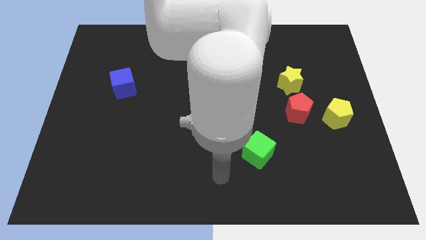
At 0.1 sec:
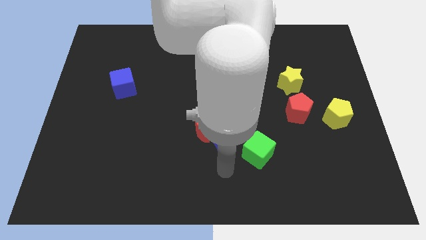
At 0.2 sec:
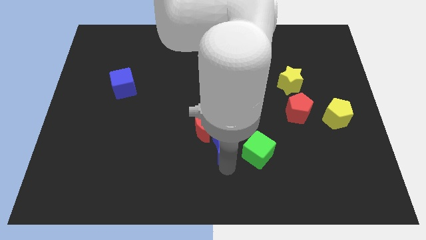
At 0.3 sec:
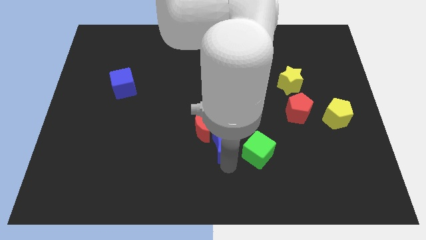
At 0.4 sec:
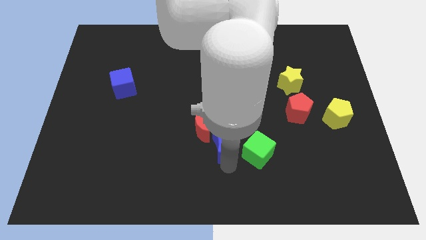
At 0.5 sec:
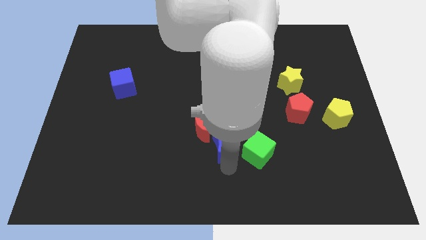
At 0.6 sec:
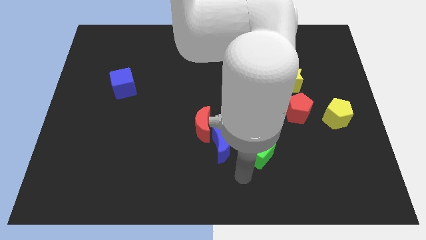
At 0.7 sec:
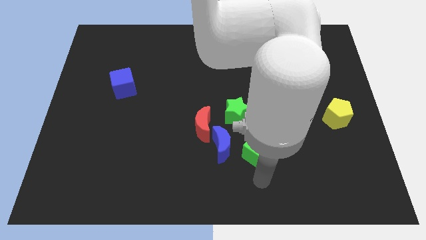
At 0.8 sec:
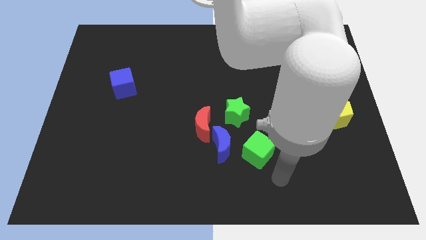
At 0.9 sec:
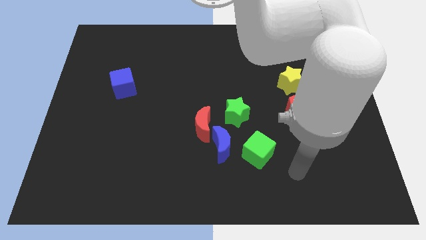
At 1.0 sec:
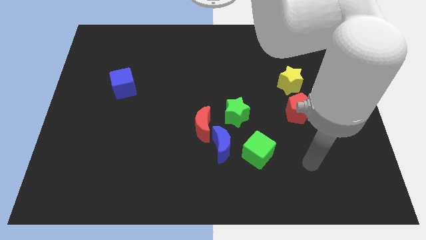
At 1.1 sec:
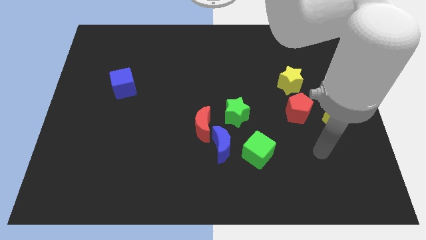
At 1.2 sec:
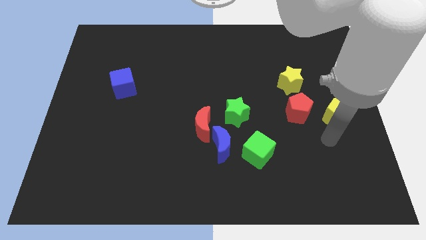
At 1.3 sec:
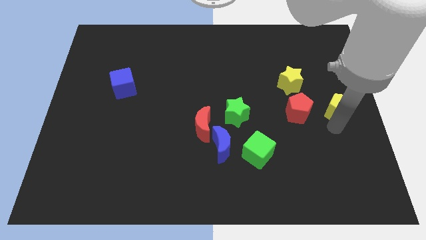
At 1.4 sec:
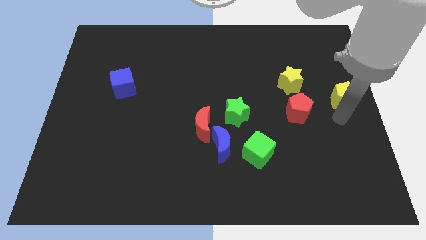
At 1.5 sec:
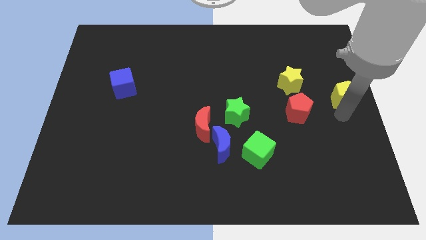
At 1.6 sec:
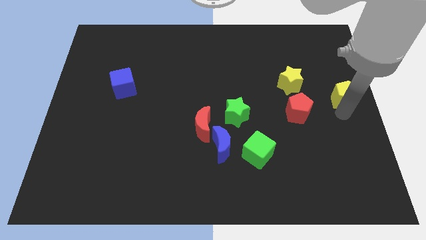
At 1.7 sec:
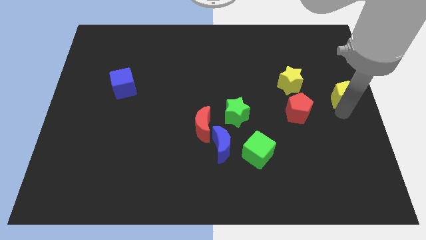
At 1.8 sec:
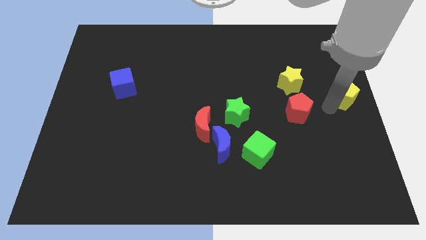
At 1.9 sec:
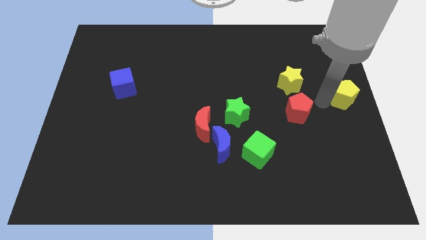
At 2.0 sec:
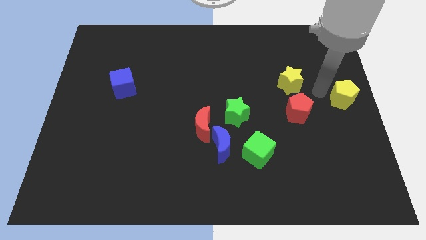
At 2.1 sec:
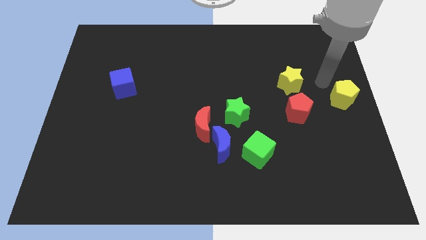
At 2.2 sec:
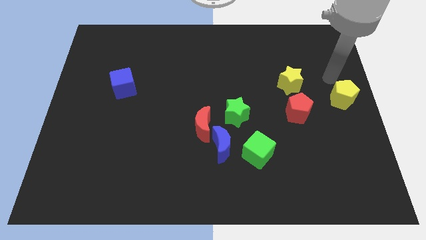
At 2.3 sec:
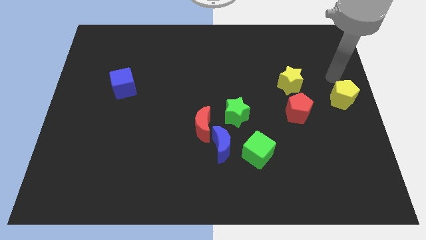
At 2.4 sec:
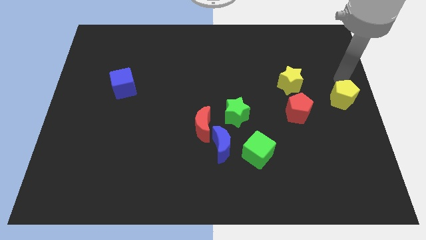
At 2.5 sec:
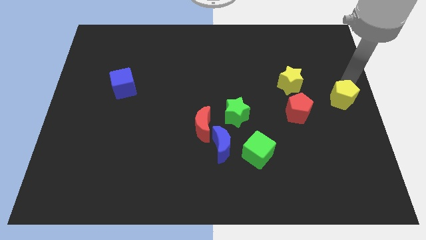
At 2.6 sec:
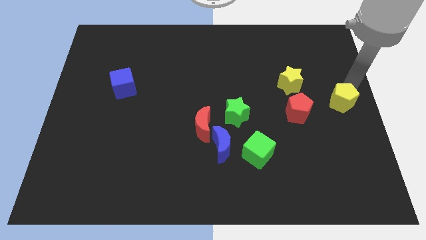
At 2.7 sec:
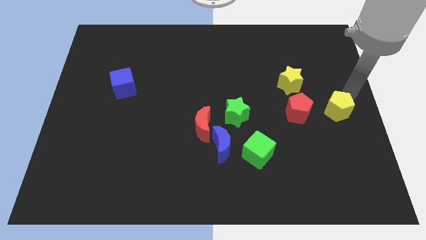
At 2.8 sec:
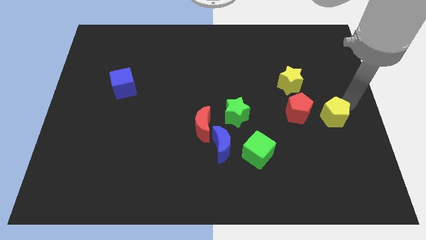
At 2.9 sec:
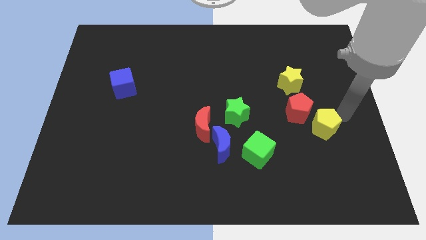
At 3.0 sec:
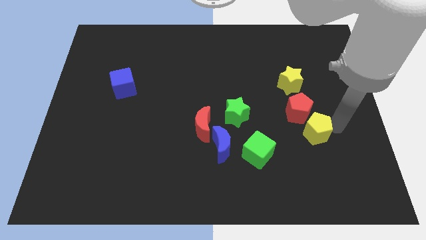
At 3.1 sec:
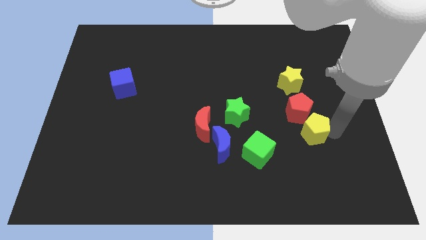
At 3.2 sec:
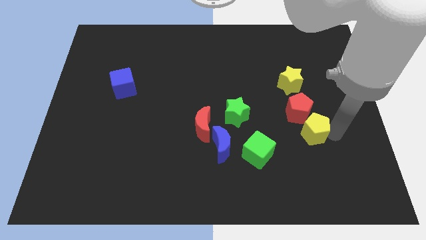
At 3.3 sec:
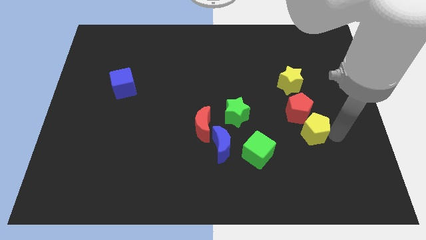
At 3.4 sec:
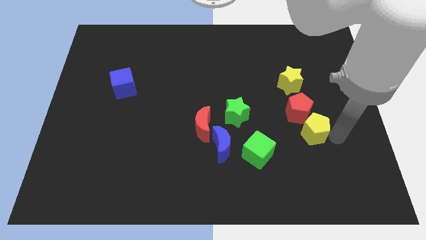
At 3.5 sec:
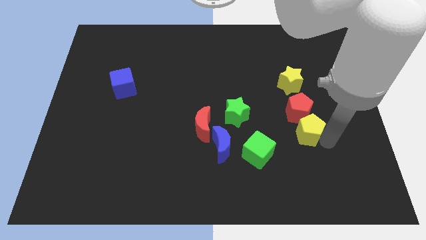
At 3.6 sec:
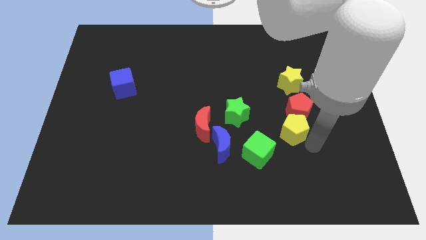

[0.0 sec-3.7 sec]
push the yellow pentagon down to the red pentagon

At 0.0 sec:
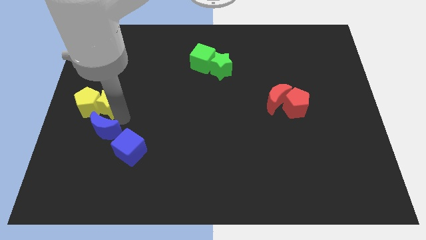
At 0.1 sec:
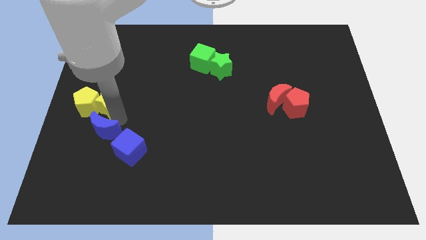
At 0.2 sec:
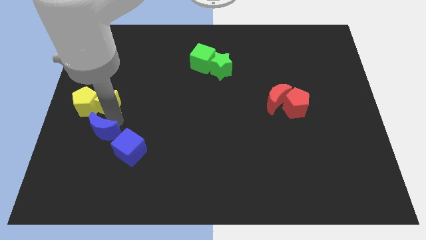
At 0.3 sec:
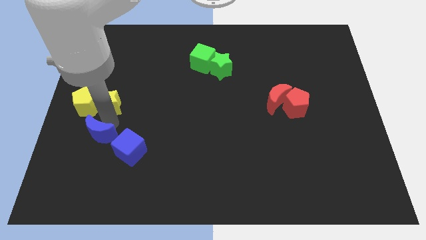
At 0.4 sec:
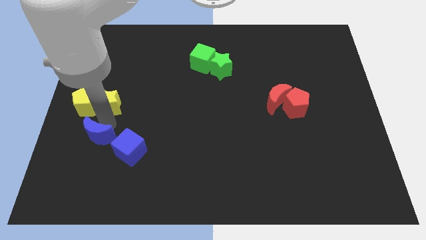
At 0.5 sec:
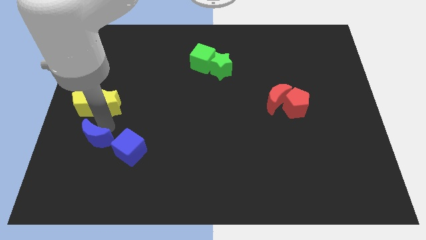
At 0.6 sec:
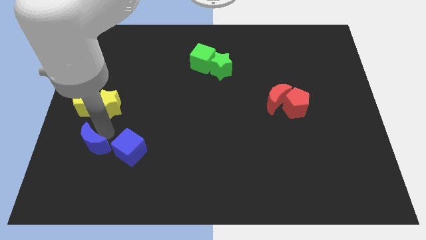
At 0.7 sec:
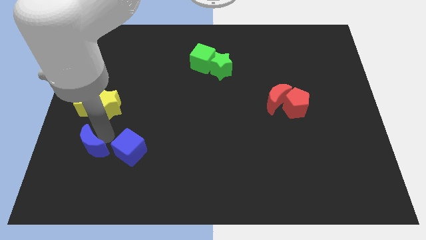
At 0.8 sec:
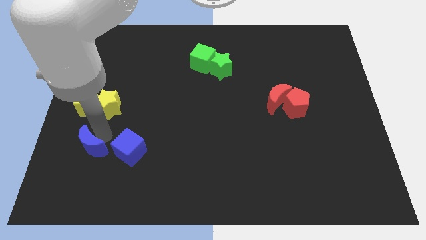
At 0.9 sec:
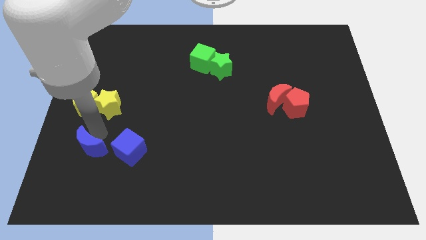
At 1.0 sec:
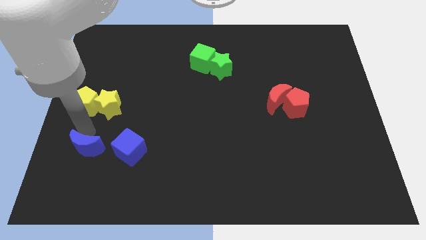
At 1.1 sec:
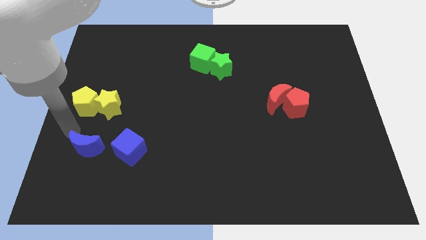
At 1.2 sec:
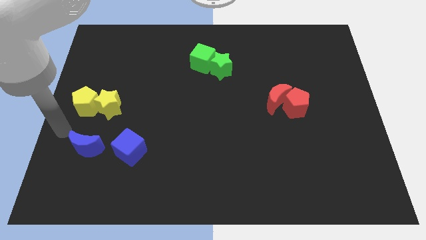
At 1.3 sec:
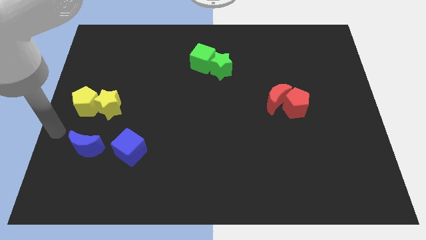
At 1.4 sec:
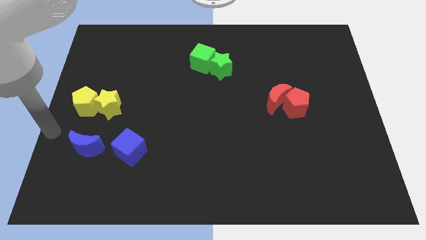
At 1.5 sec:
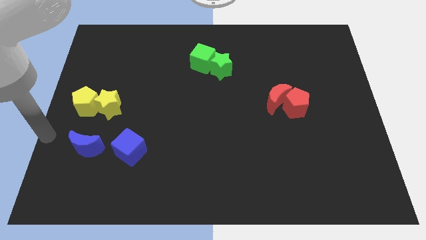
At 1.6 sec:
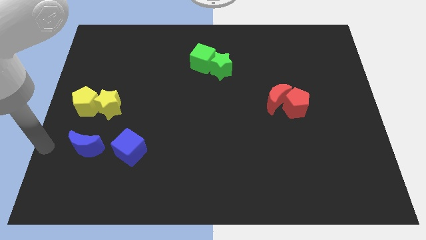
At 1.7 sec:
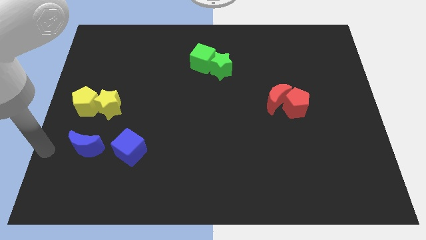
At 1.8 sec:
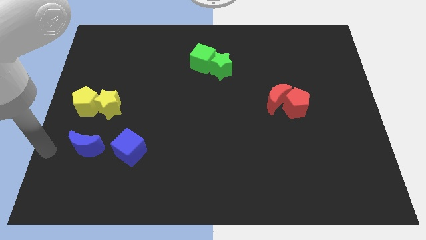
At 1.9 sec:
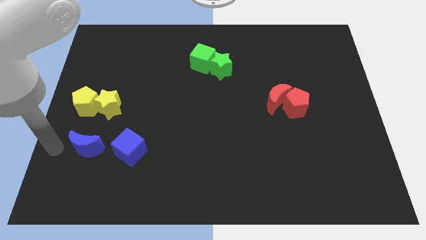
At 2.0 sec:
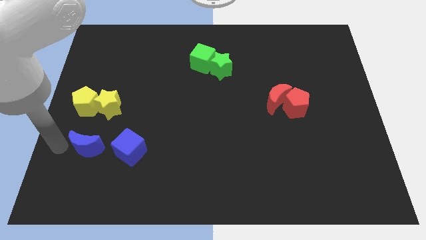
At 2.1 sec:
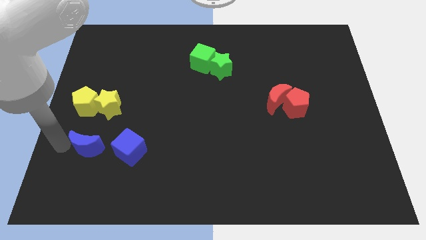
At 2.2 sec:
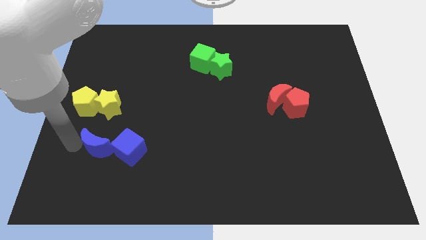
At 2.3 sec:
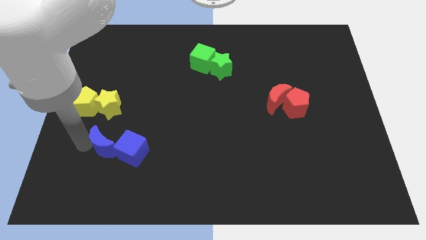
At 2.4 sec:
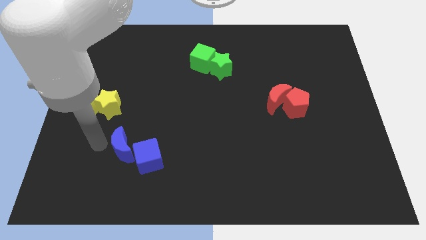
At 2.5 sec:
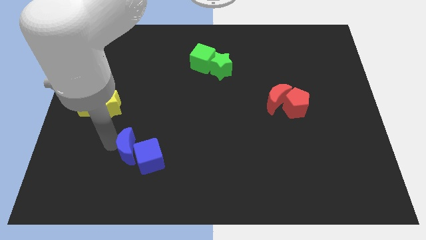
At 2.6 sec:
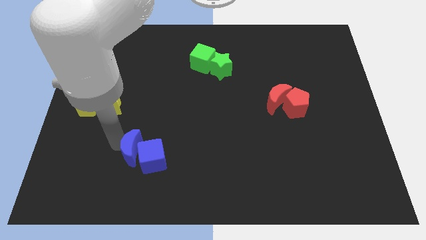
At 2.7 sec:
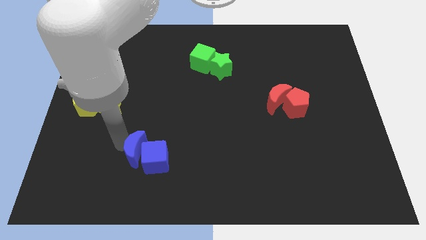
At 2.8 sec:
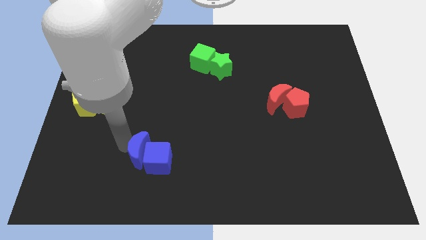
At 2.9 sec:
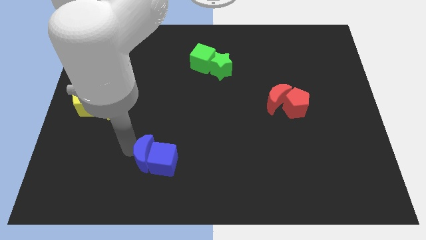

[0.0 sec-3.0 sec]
move blue crescent in to the blue cube

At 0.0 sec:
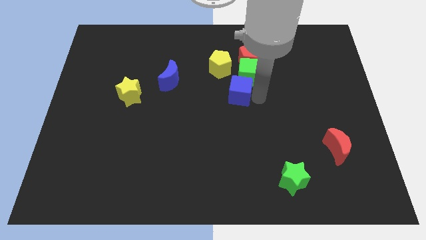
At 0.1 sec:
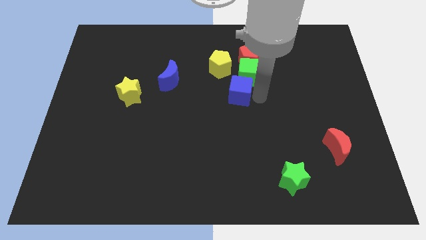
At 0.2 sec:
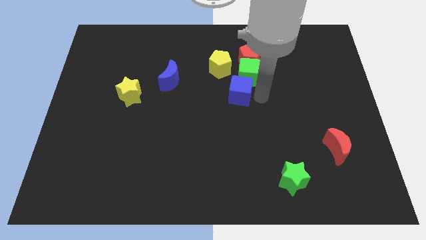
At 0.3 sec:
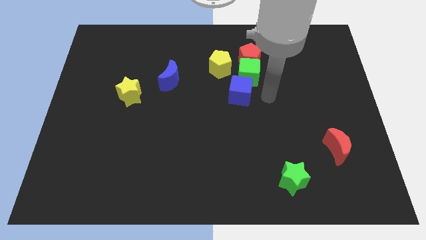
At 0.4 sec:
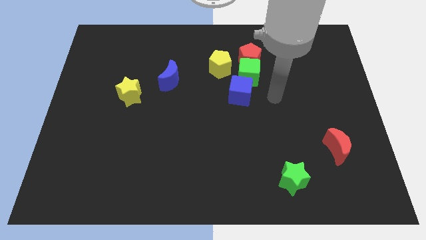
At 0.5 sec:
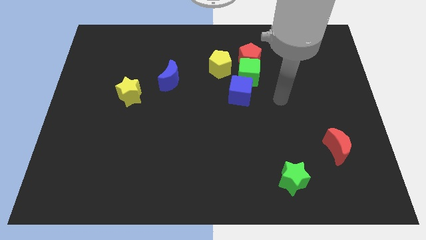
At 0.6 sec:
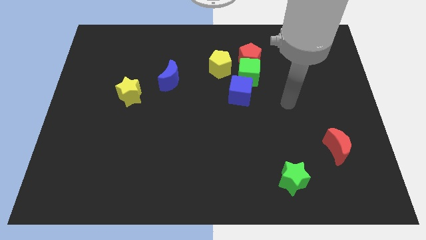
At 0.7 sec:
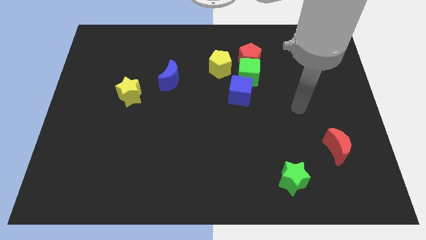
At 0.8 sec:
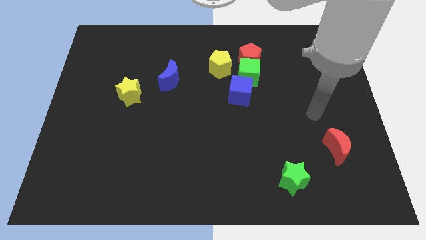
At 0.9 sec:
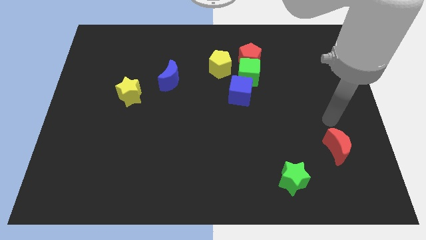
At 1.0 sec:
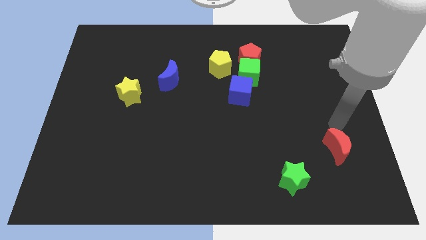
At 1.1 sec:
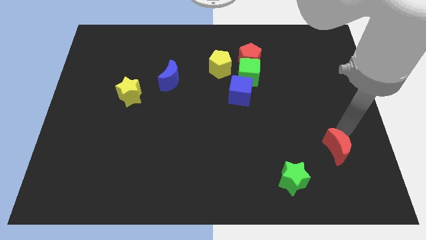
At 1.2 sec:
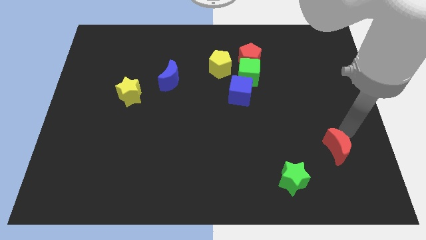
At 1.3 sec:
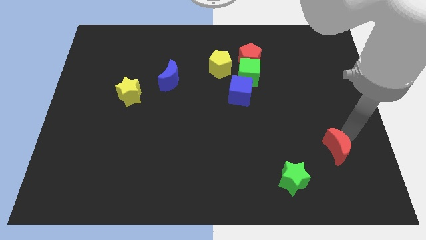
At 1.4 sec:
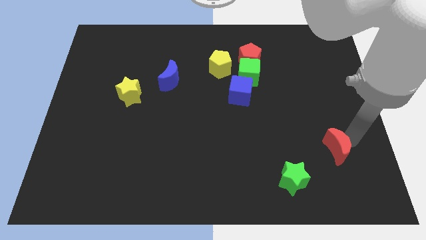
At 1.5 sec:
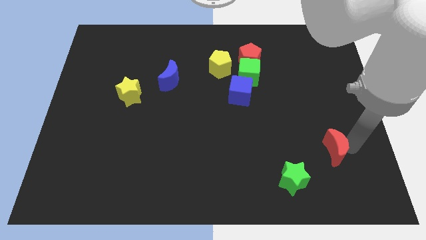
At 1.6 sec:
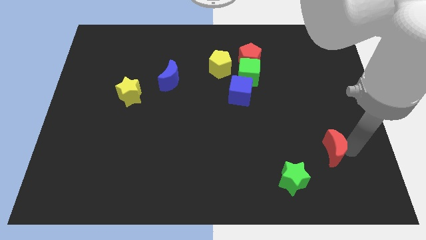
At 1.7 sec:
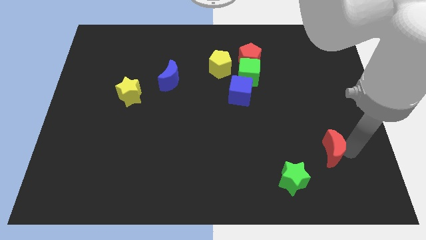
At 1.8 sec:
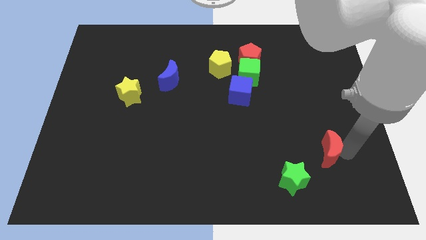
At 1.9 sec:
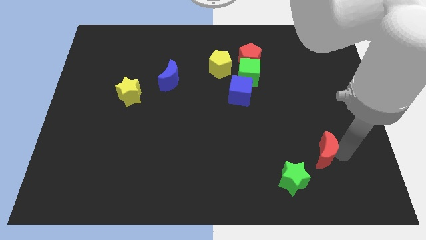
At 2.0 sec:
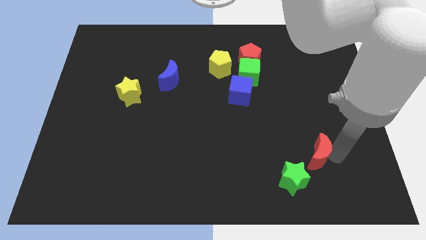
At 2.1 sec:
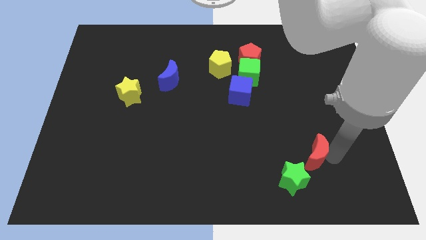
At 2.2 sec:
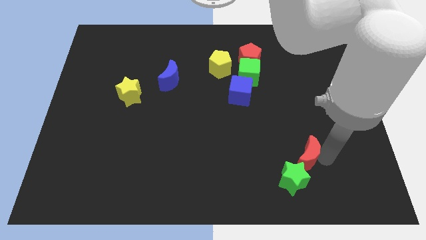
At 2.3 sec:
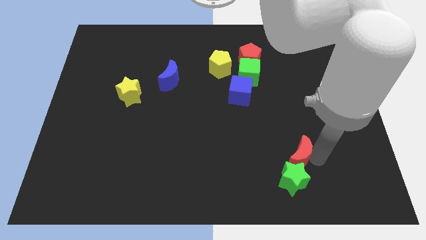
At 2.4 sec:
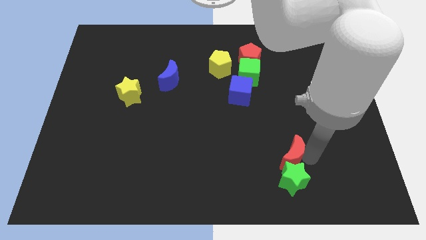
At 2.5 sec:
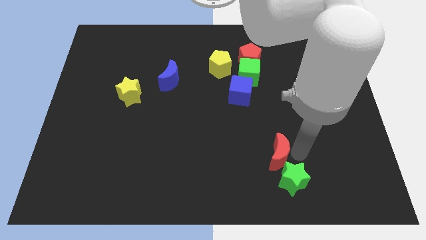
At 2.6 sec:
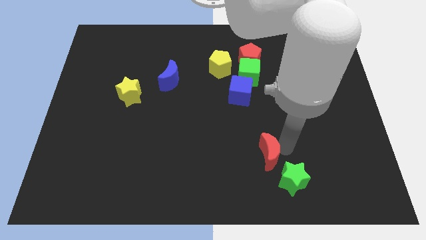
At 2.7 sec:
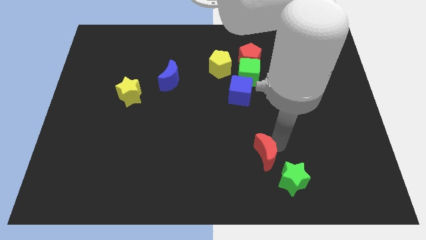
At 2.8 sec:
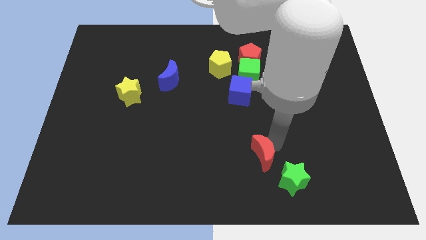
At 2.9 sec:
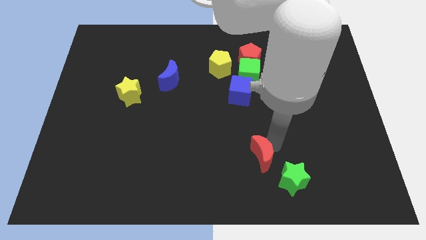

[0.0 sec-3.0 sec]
place the red moon above the green star
